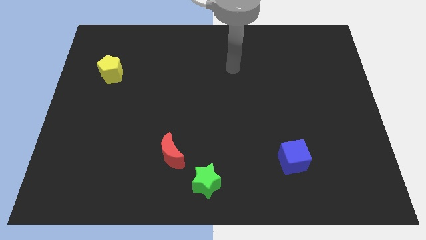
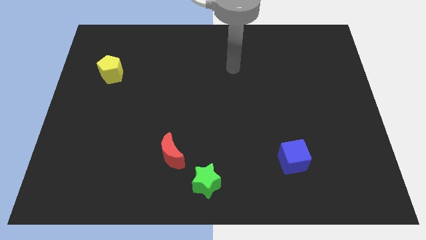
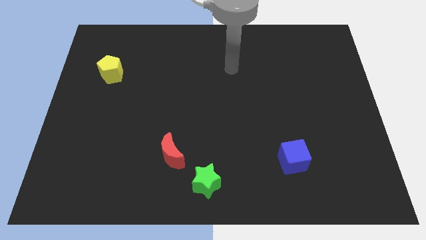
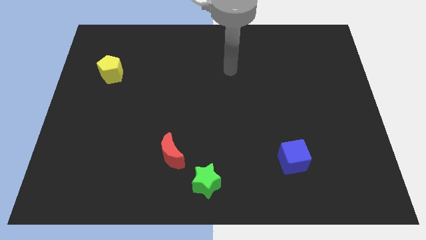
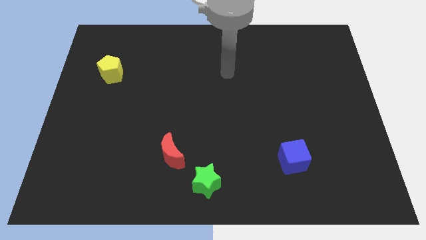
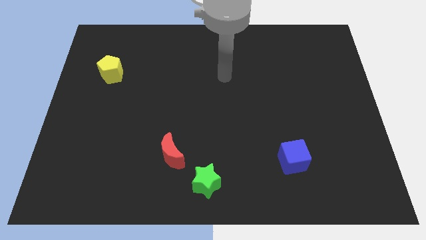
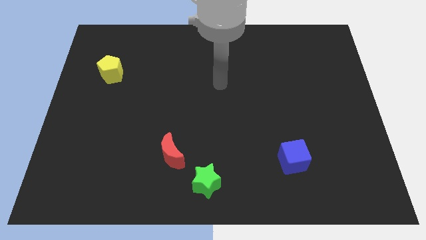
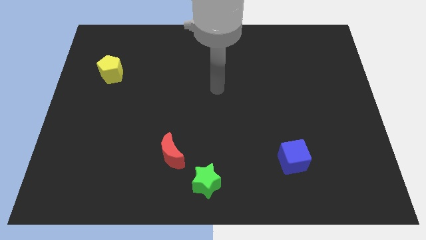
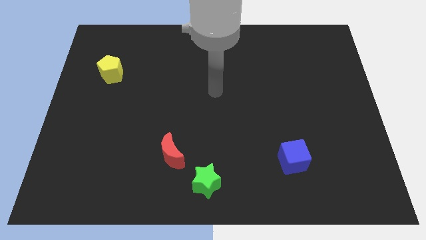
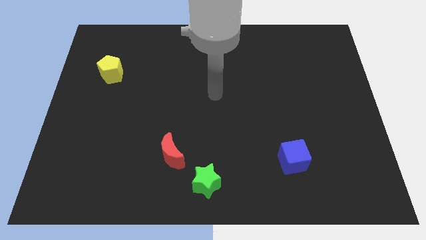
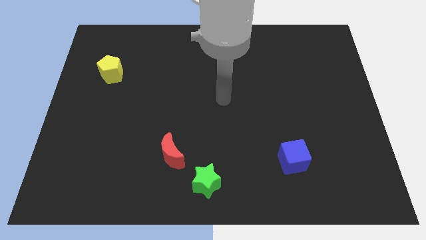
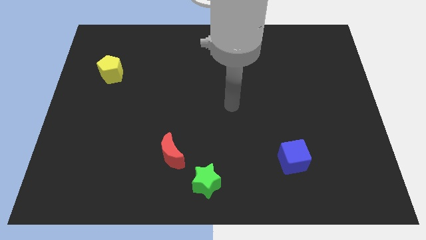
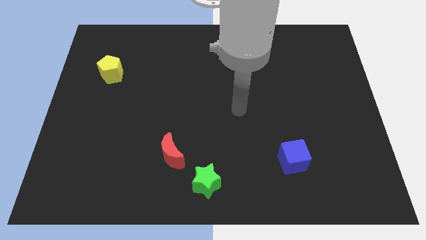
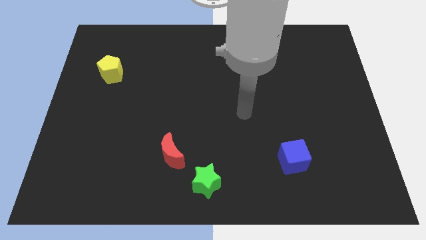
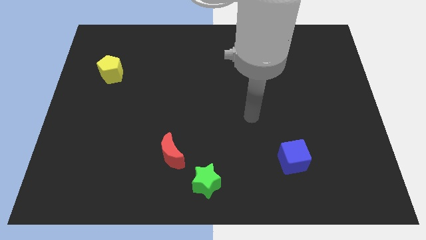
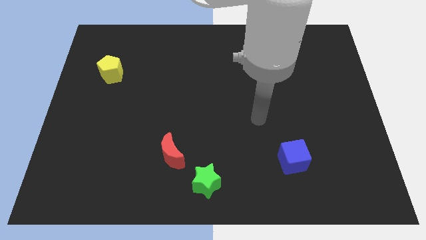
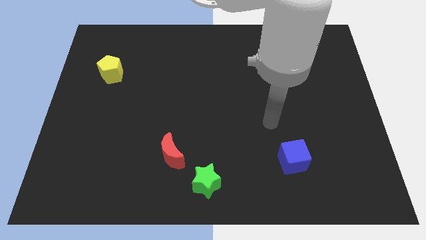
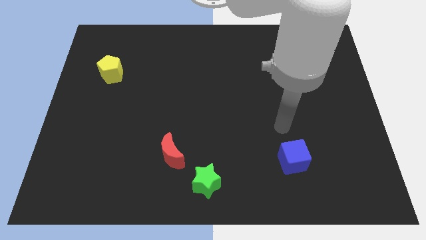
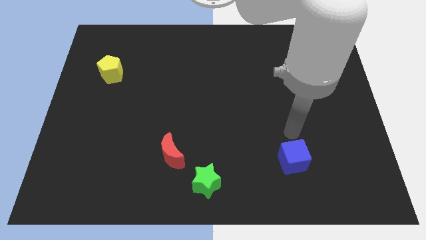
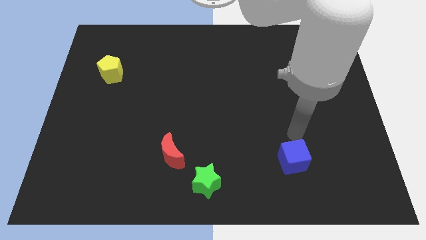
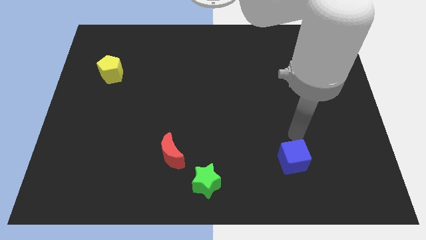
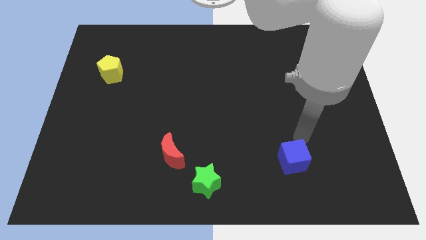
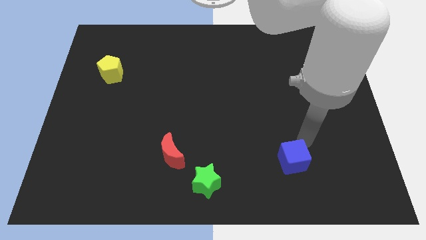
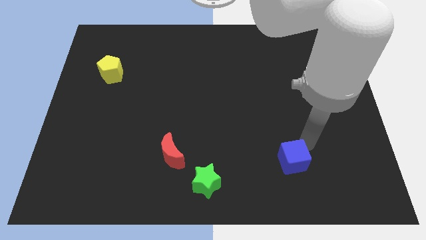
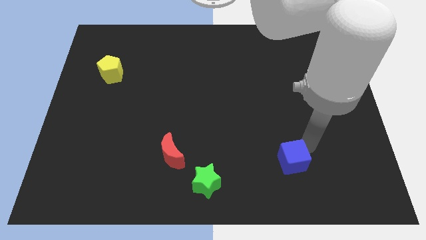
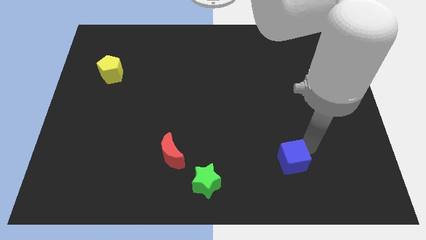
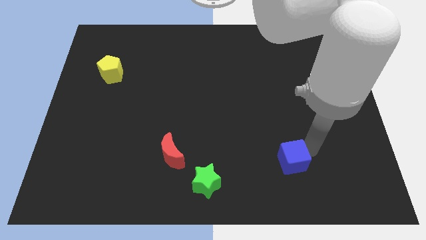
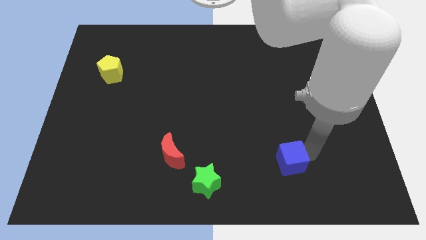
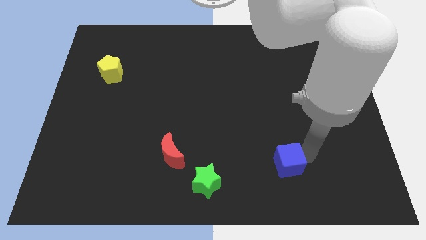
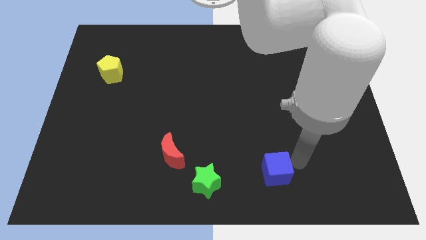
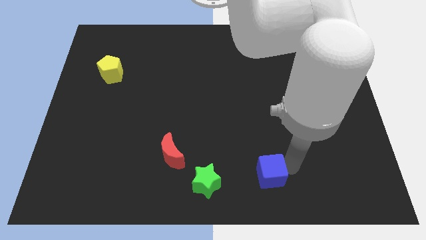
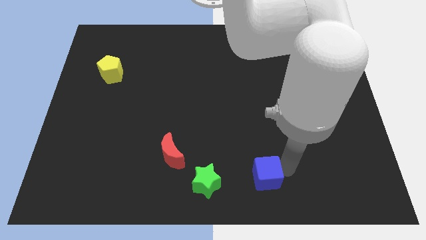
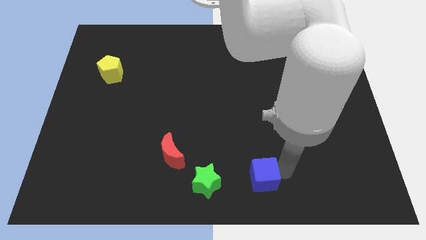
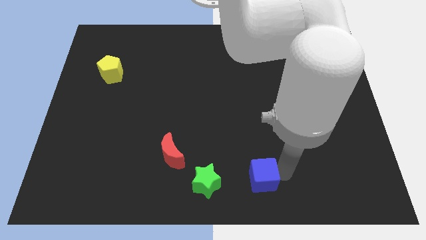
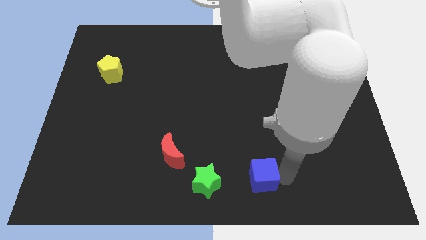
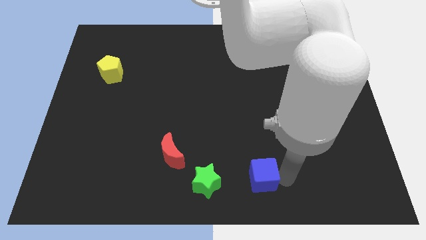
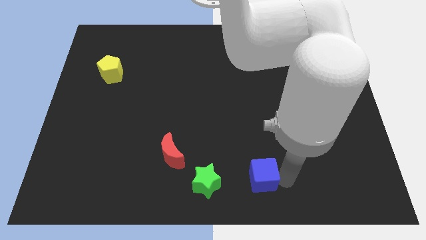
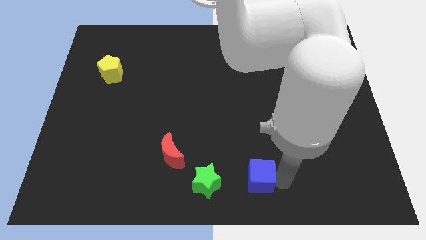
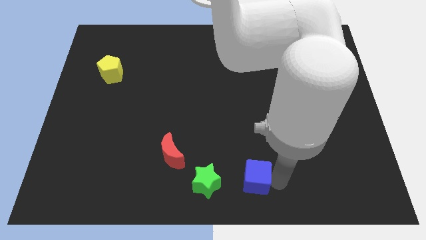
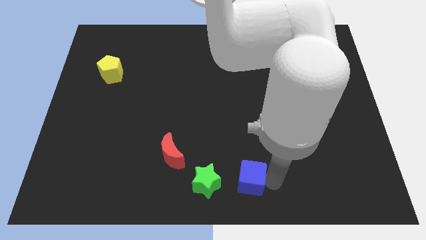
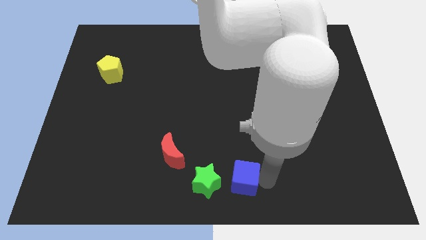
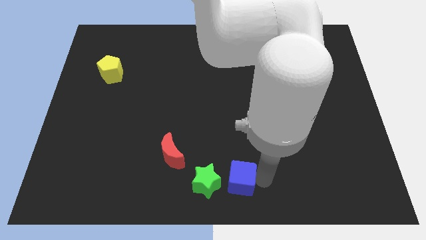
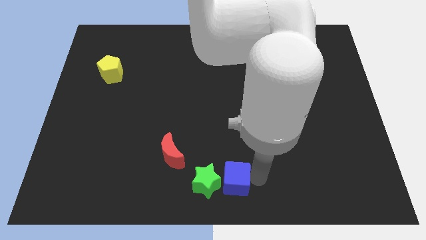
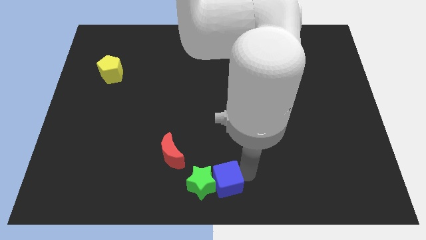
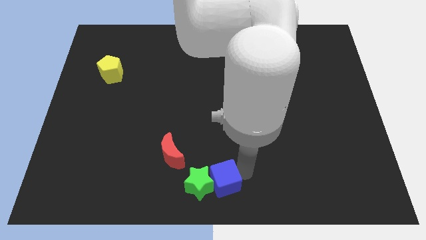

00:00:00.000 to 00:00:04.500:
slide the cube towards the star

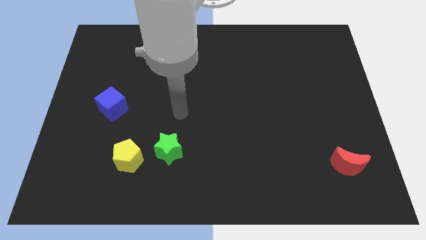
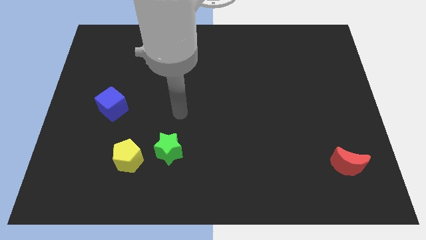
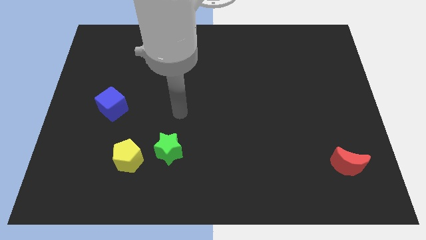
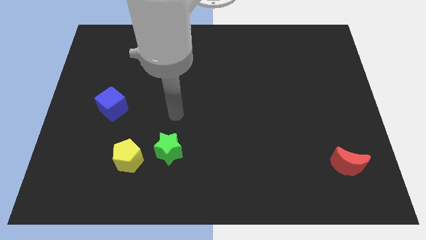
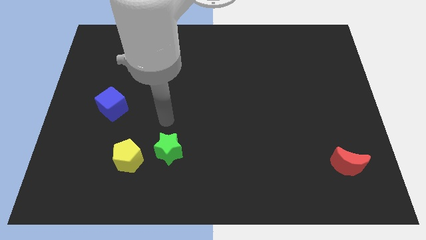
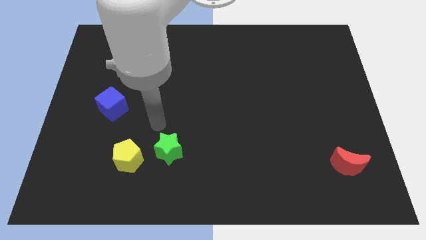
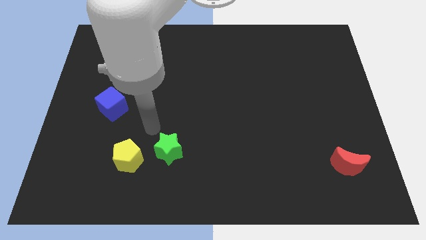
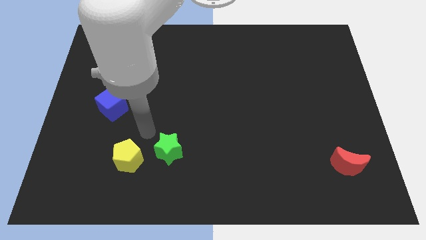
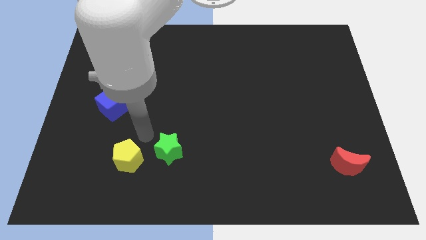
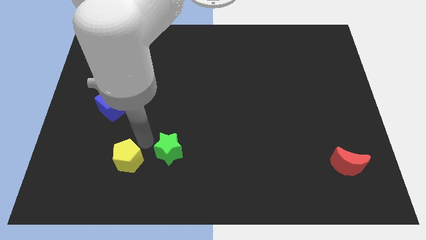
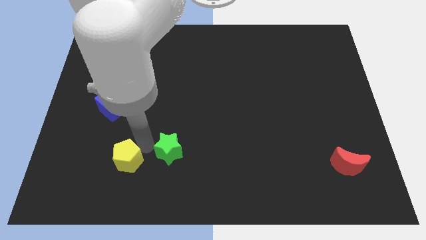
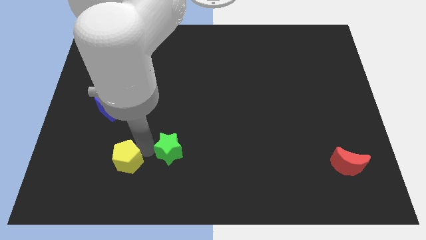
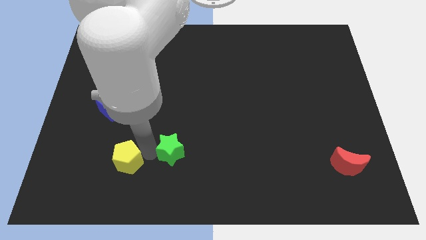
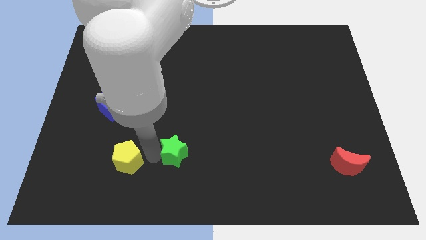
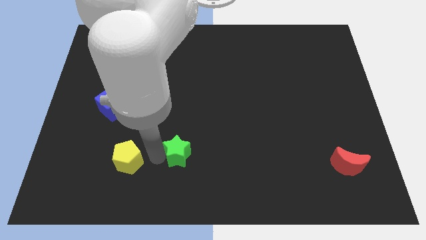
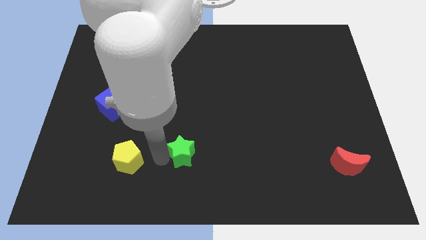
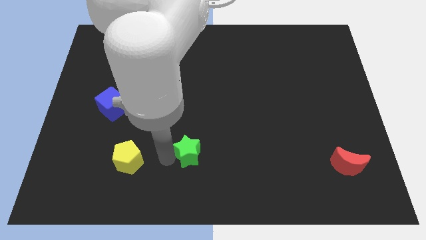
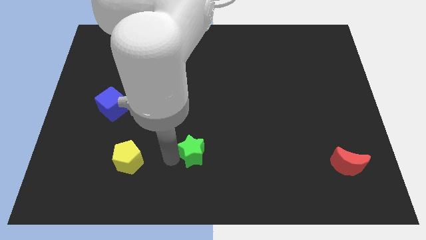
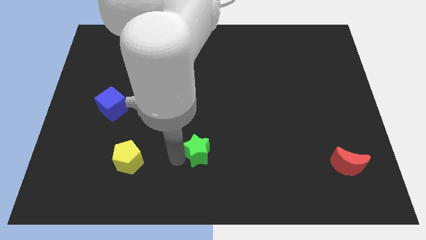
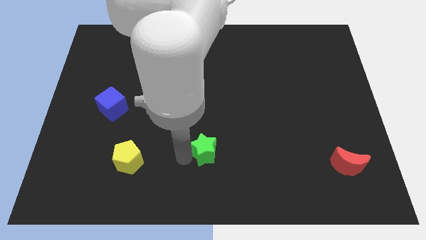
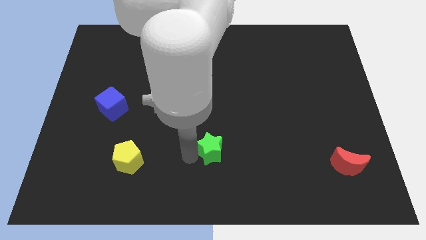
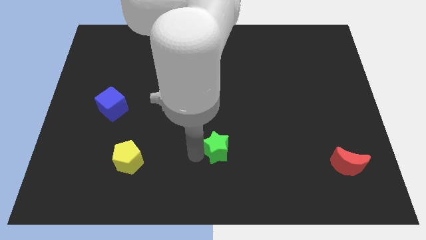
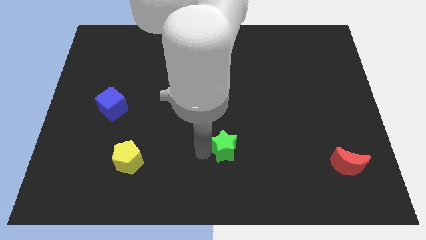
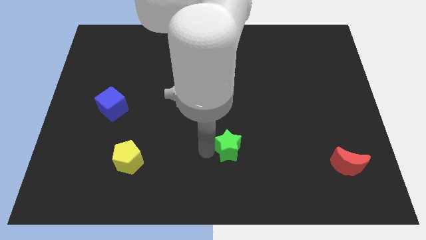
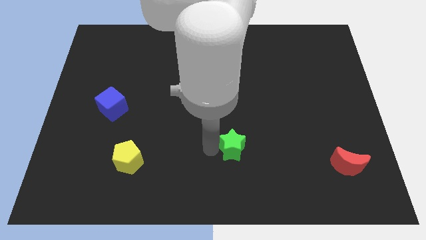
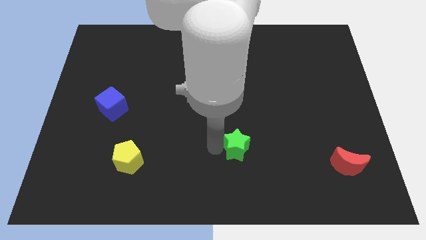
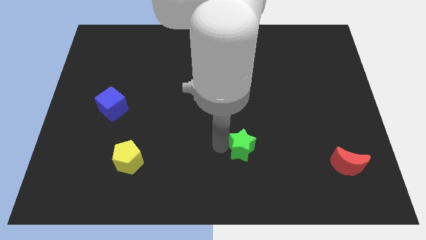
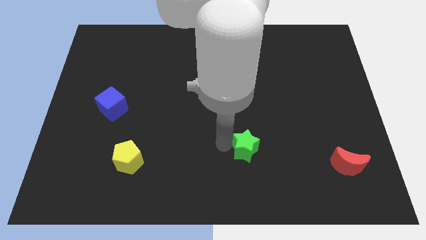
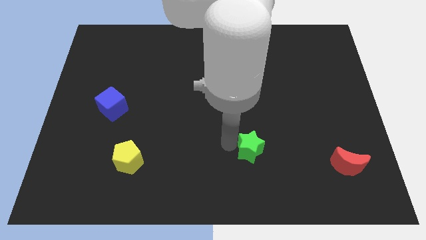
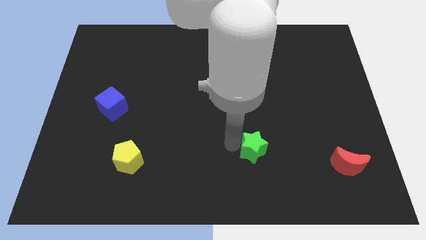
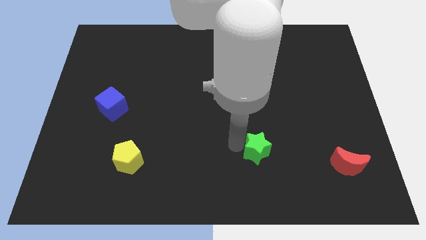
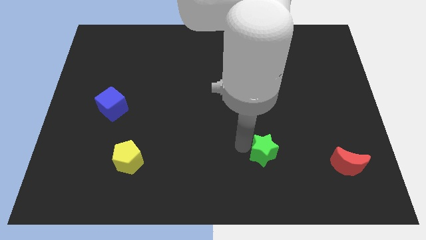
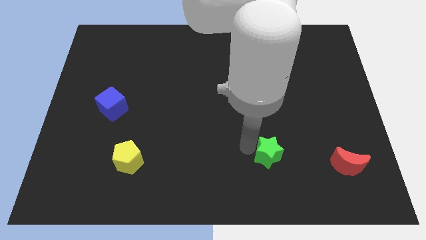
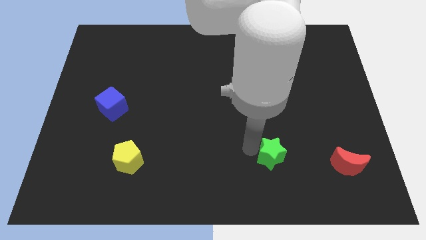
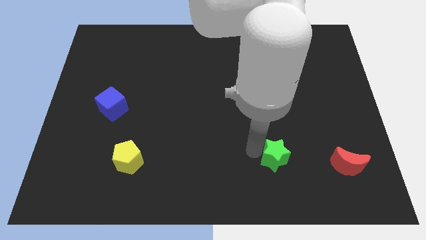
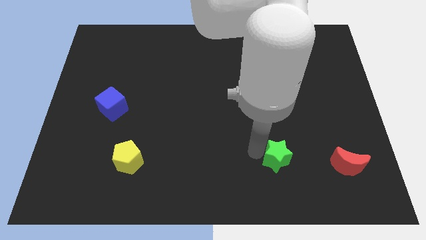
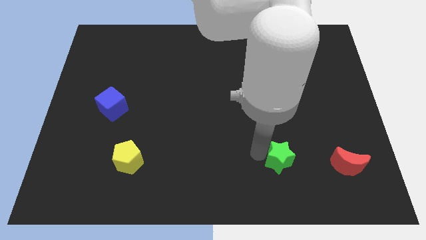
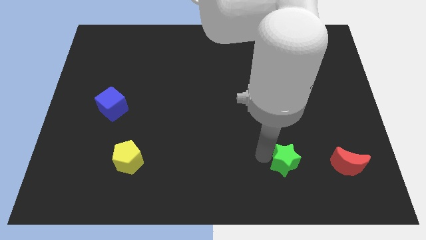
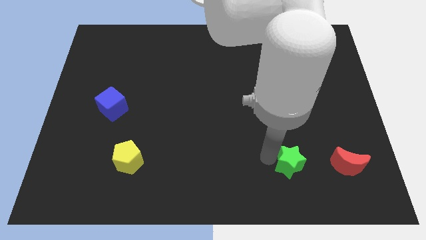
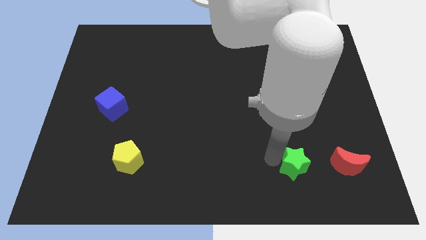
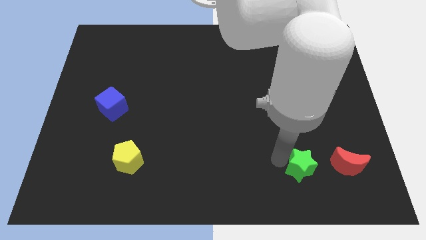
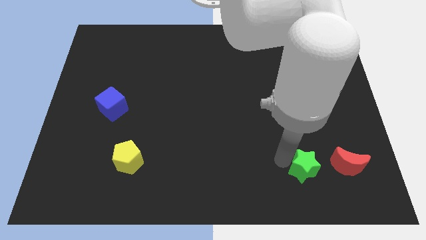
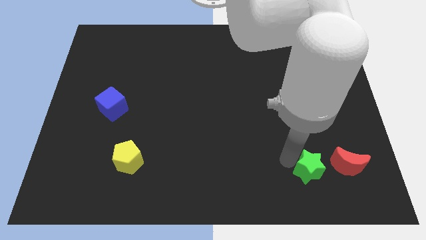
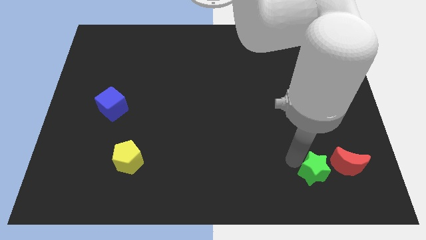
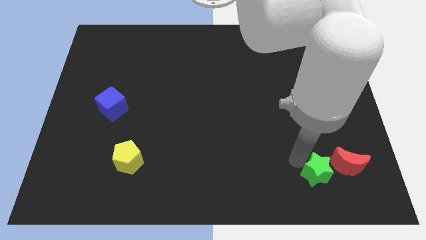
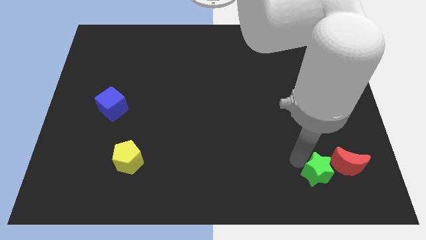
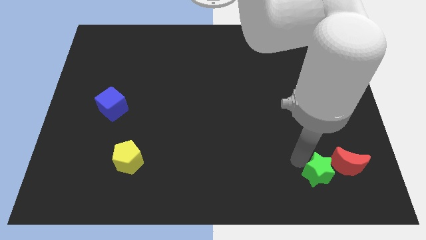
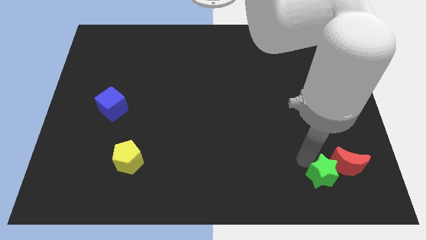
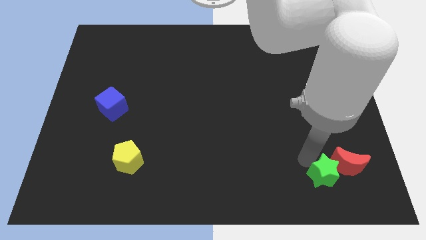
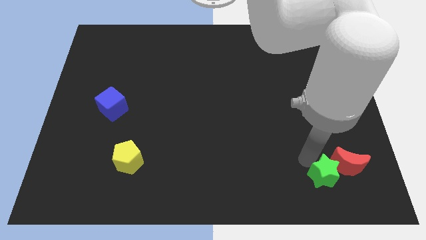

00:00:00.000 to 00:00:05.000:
slide the star close to the red block
